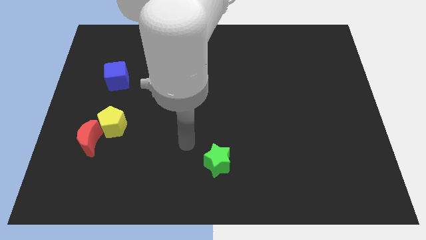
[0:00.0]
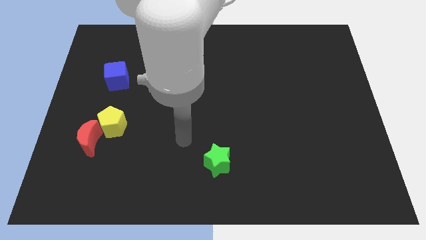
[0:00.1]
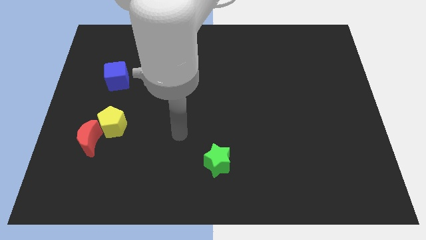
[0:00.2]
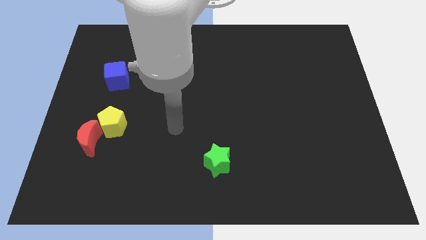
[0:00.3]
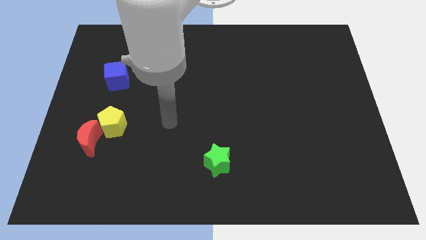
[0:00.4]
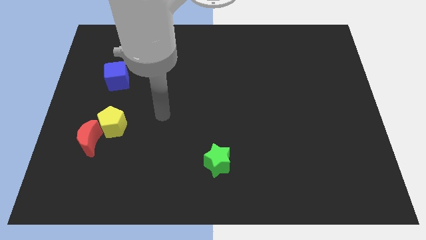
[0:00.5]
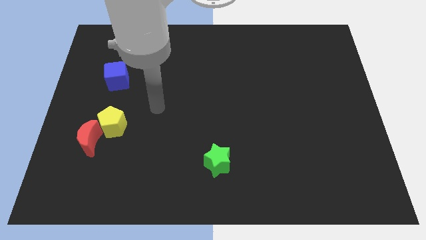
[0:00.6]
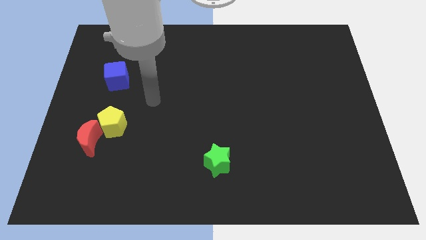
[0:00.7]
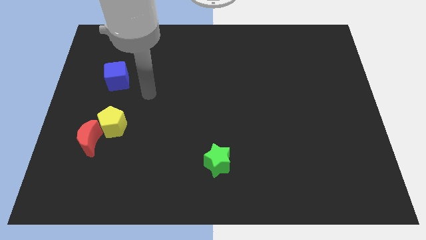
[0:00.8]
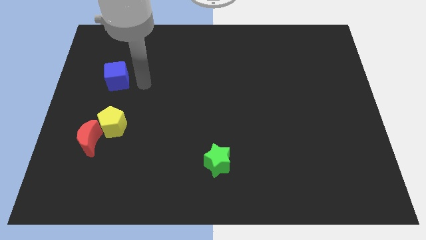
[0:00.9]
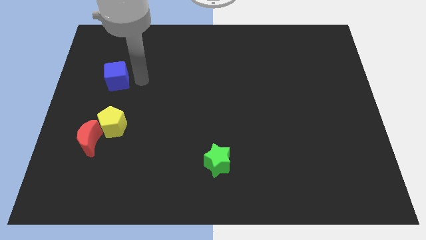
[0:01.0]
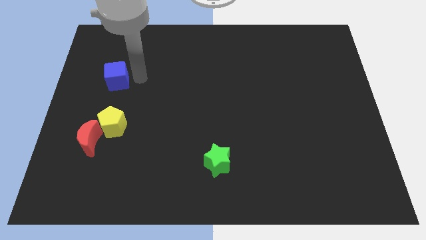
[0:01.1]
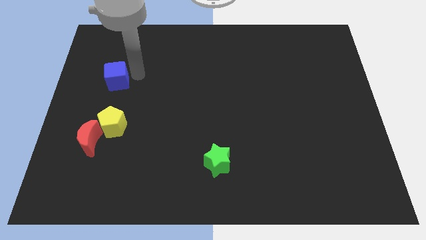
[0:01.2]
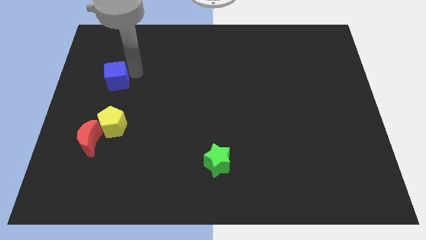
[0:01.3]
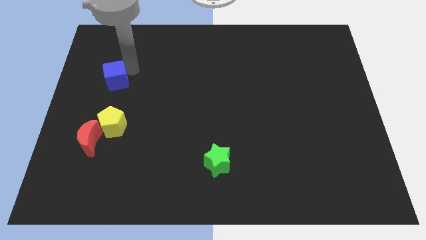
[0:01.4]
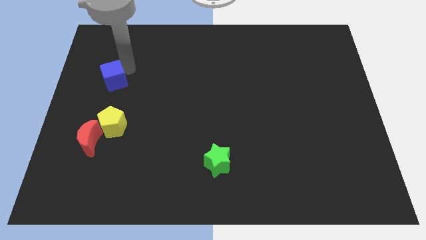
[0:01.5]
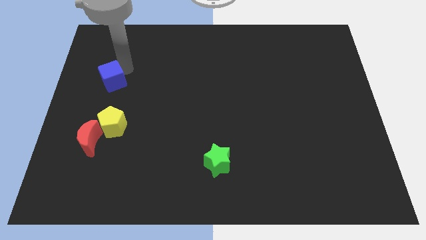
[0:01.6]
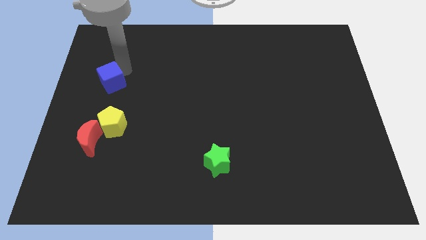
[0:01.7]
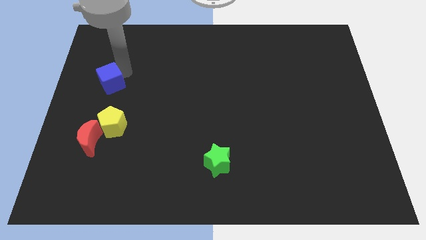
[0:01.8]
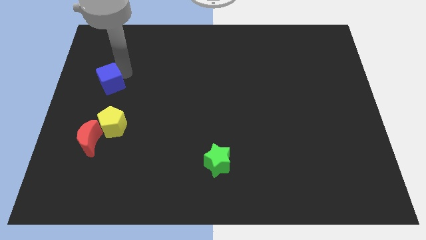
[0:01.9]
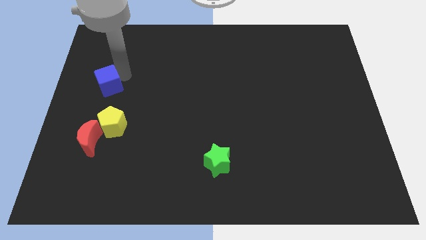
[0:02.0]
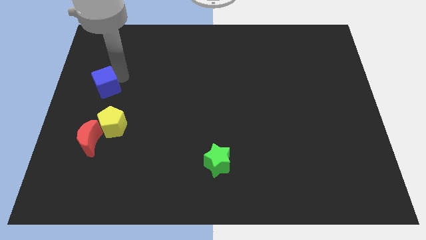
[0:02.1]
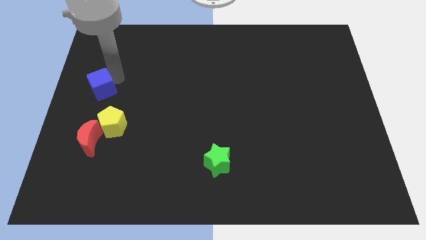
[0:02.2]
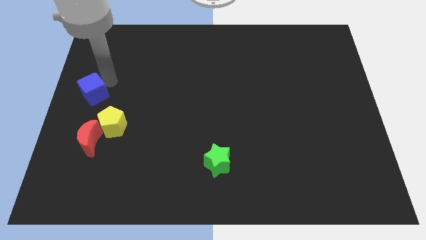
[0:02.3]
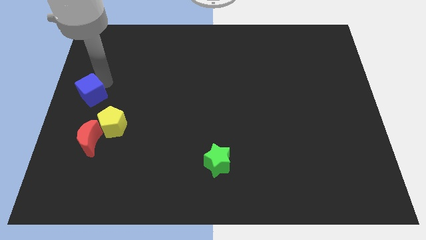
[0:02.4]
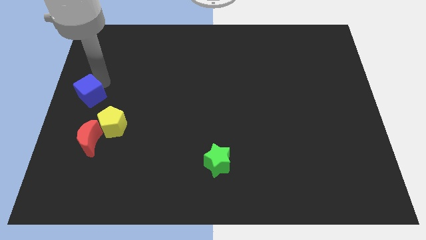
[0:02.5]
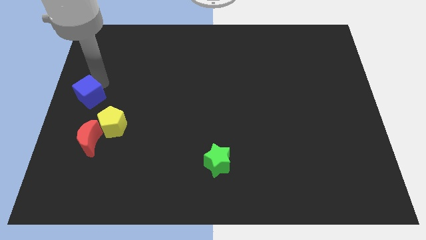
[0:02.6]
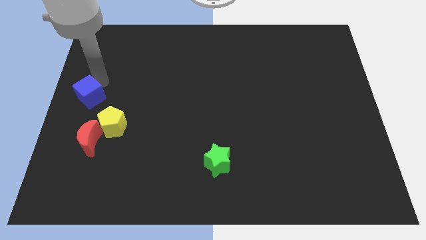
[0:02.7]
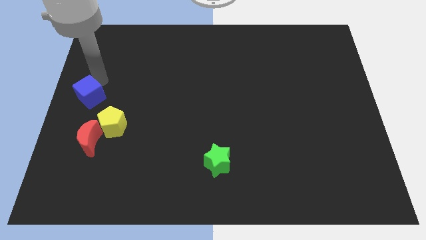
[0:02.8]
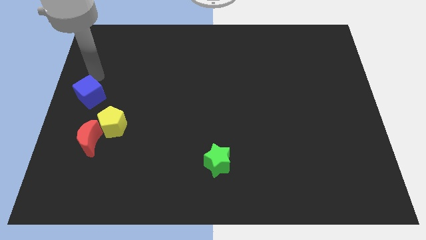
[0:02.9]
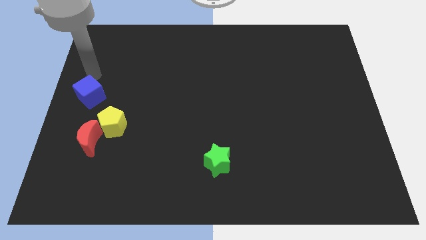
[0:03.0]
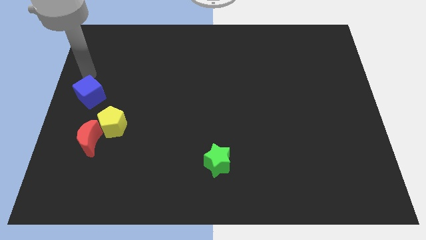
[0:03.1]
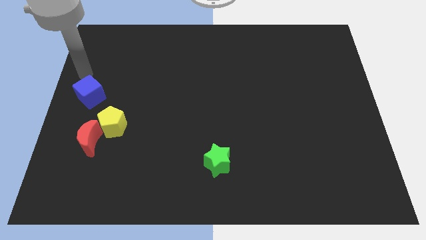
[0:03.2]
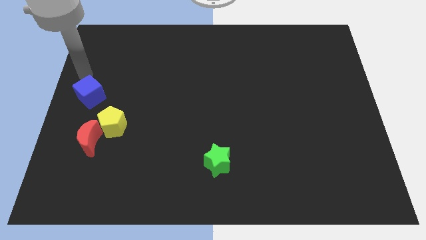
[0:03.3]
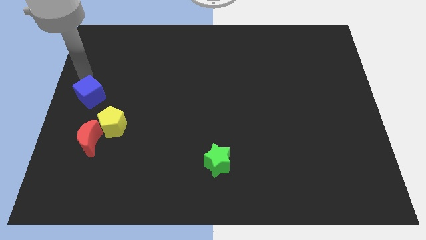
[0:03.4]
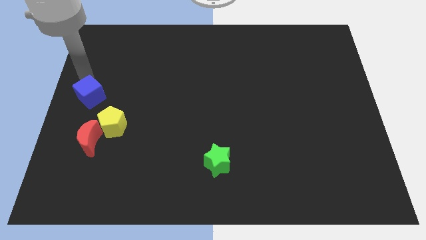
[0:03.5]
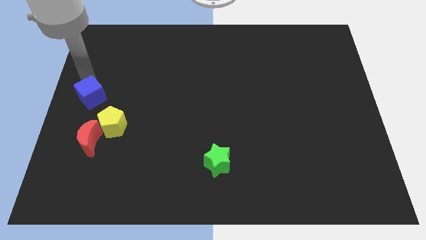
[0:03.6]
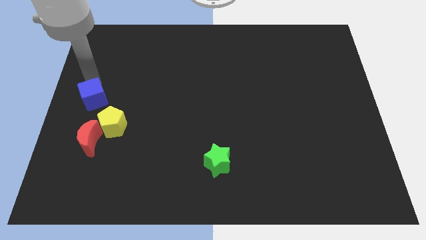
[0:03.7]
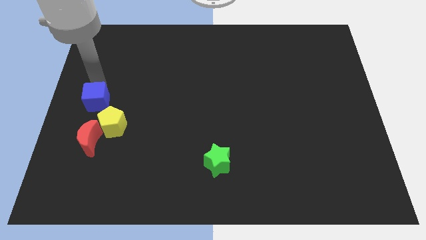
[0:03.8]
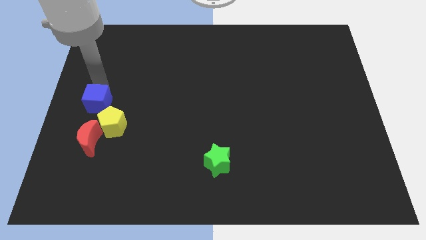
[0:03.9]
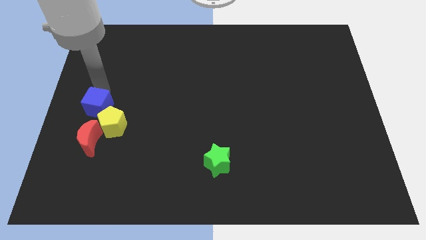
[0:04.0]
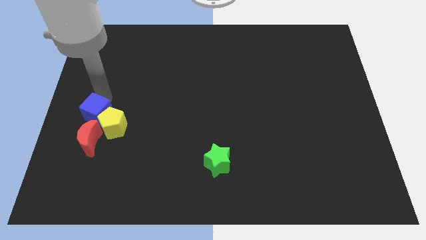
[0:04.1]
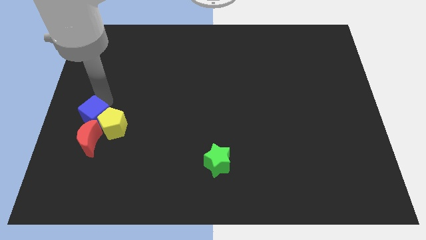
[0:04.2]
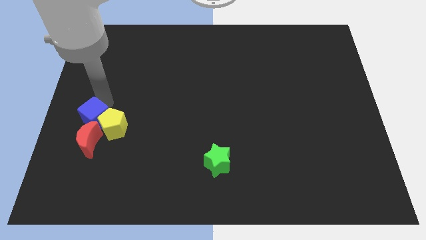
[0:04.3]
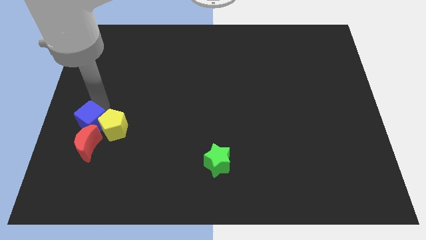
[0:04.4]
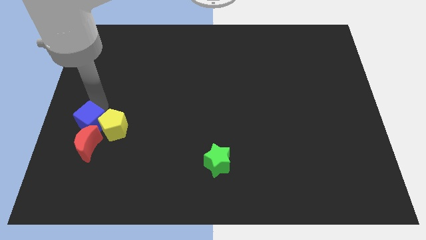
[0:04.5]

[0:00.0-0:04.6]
move the blue block next to the moon

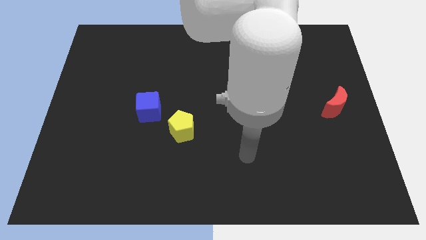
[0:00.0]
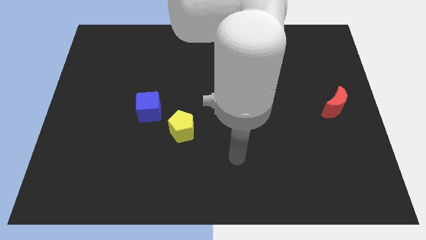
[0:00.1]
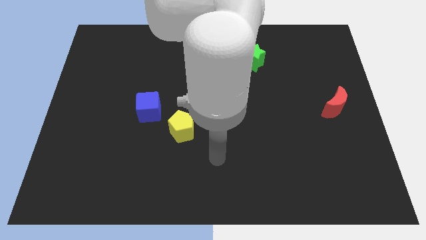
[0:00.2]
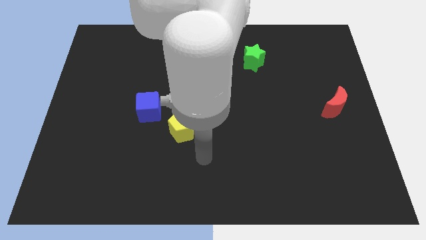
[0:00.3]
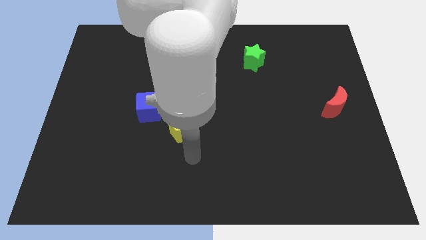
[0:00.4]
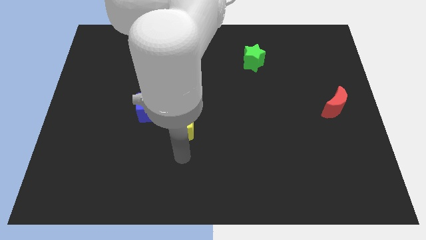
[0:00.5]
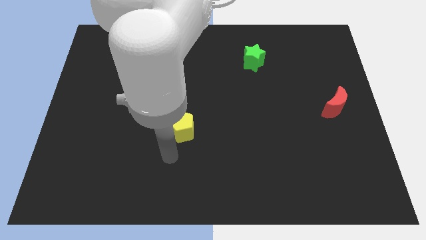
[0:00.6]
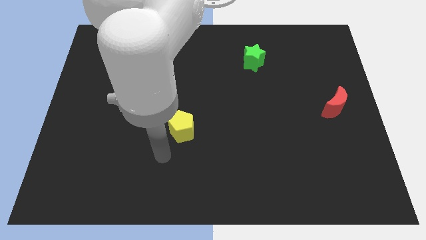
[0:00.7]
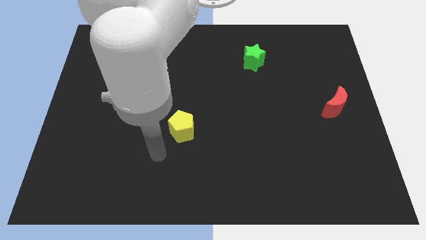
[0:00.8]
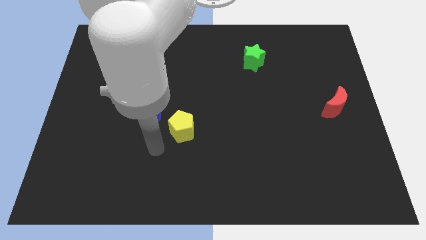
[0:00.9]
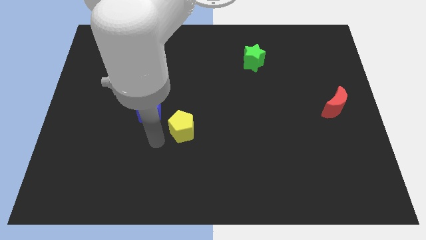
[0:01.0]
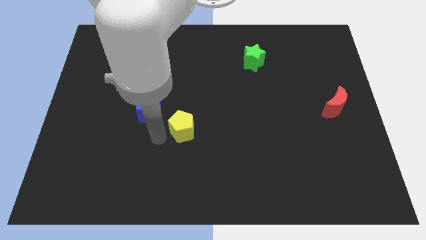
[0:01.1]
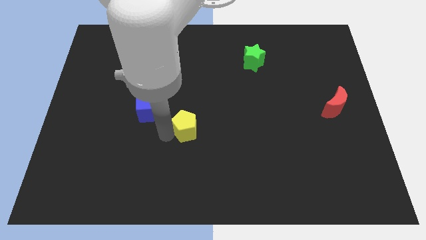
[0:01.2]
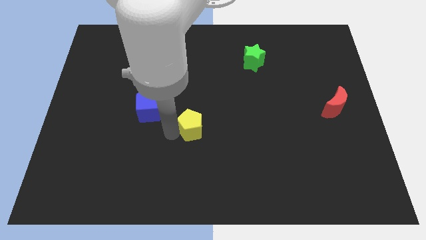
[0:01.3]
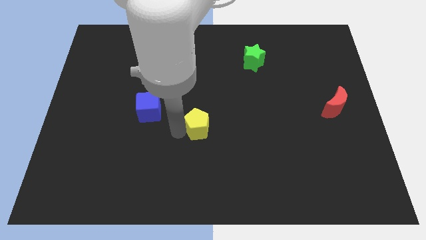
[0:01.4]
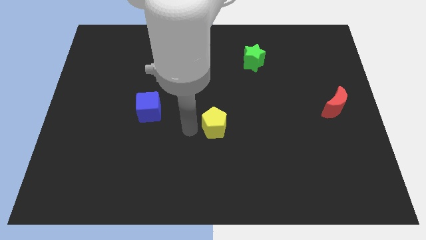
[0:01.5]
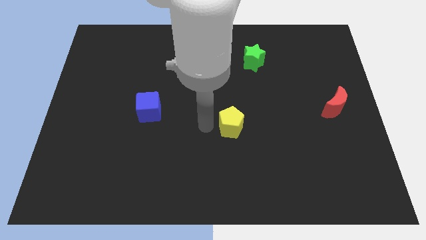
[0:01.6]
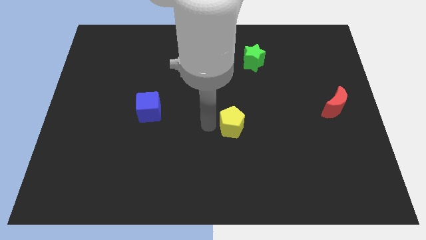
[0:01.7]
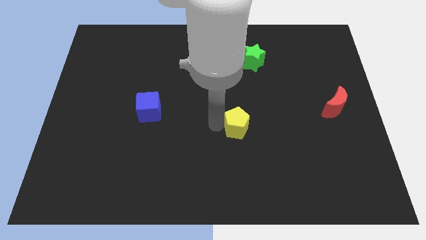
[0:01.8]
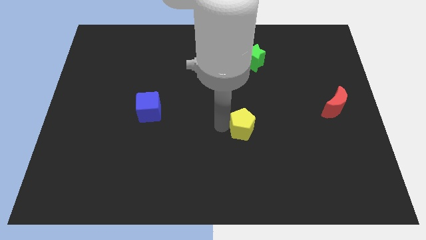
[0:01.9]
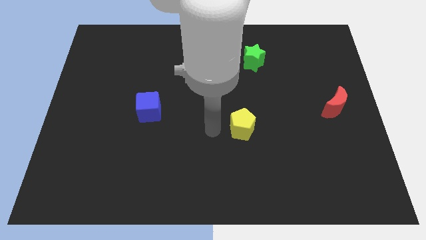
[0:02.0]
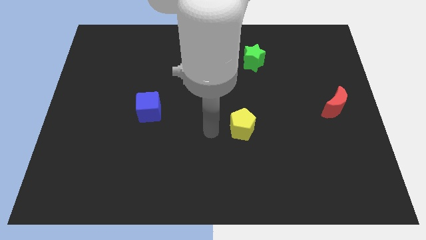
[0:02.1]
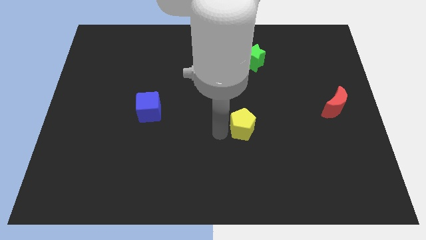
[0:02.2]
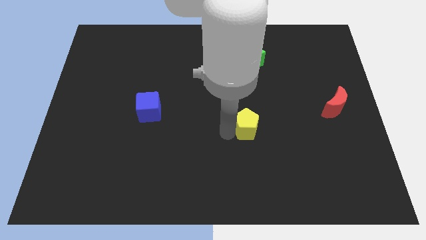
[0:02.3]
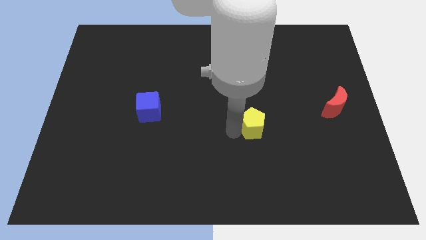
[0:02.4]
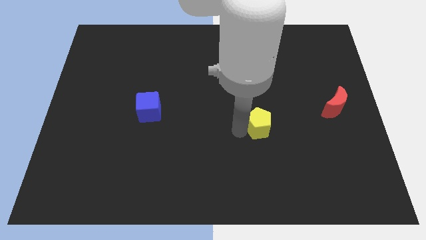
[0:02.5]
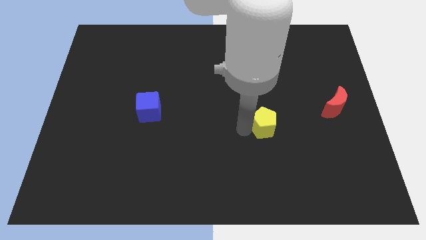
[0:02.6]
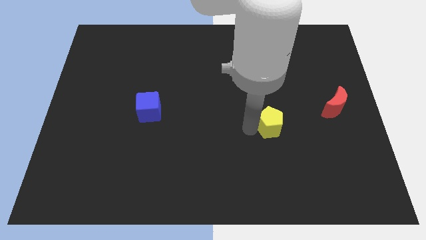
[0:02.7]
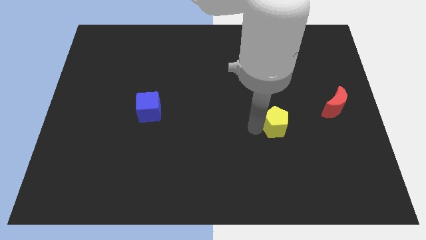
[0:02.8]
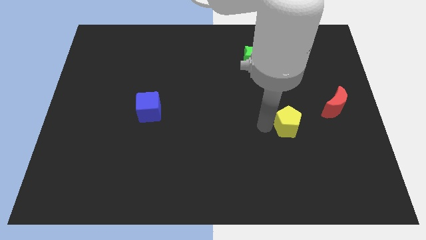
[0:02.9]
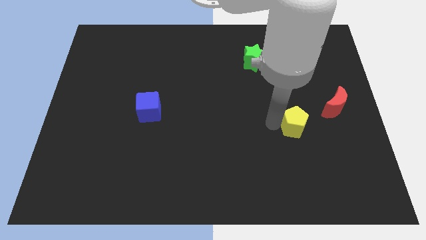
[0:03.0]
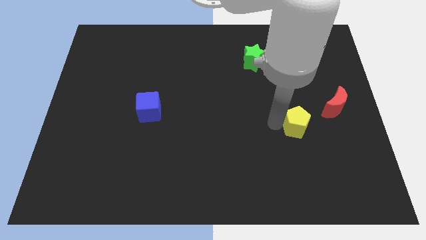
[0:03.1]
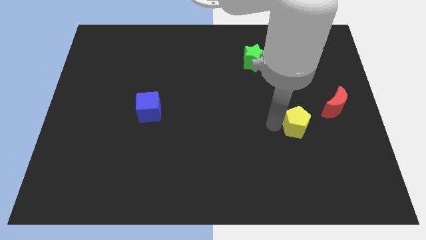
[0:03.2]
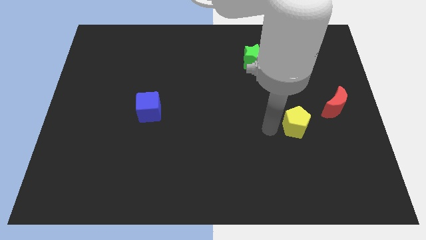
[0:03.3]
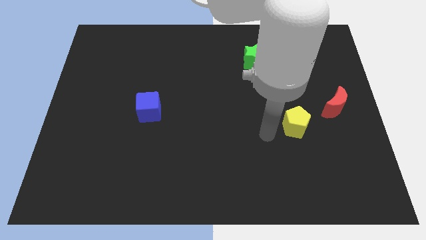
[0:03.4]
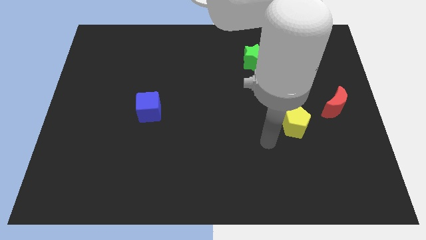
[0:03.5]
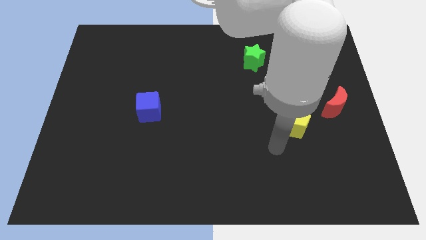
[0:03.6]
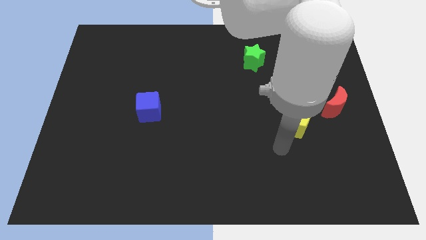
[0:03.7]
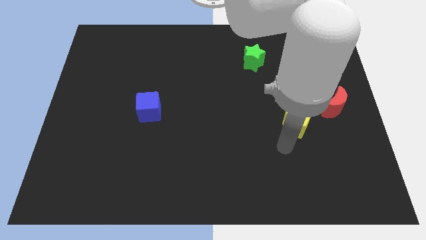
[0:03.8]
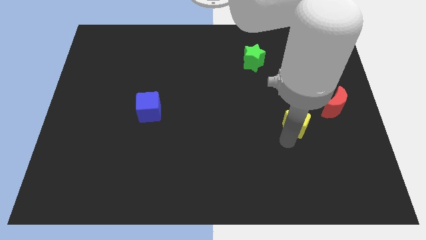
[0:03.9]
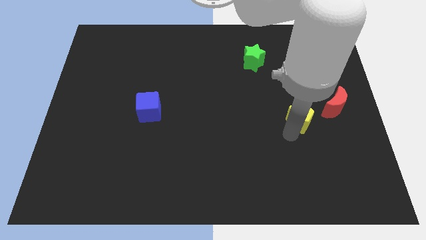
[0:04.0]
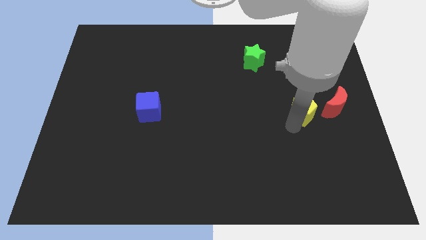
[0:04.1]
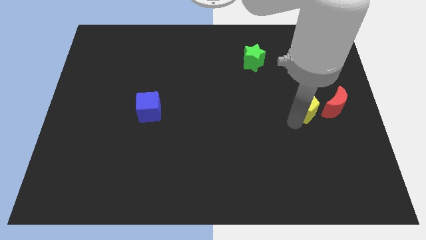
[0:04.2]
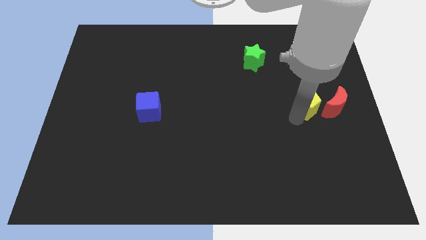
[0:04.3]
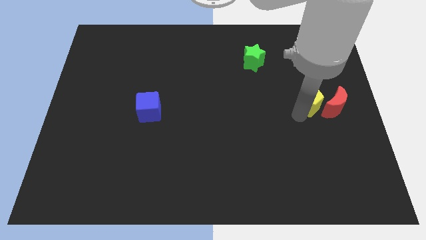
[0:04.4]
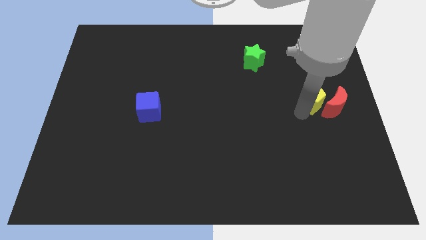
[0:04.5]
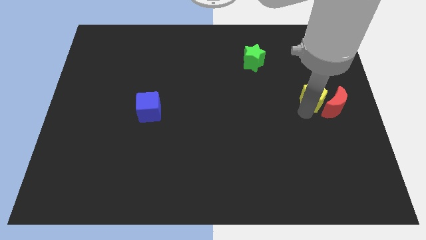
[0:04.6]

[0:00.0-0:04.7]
slide the yellow pentagon close to the moon
